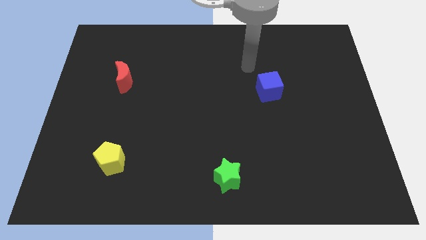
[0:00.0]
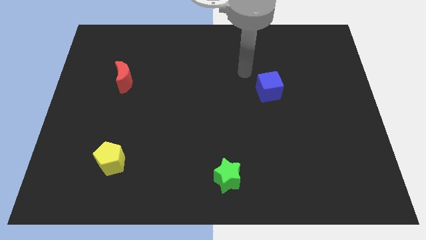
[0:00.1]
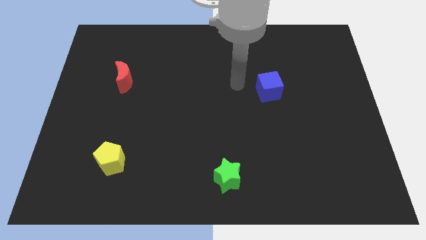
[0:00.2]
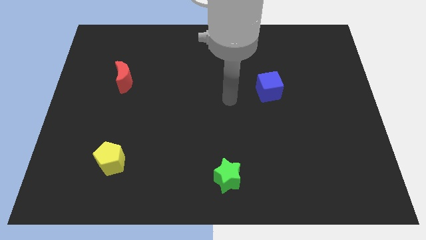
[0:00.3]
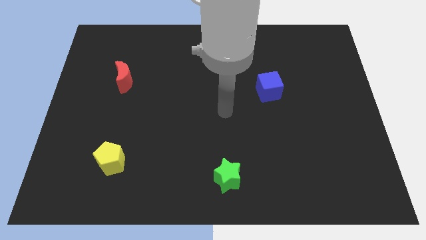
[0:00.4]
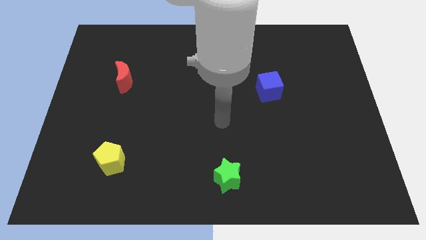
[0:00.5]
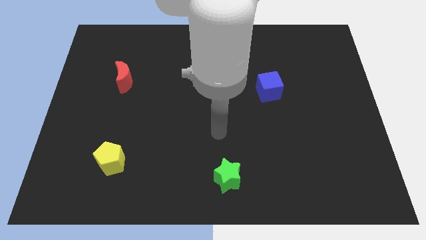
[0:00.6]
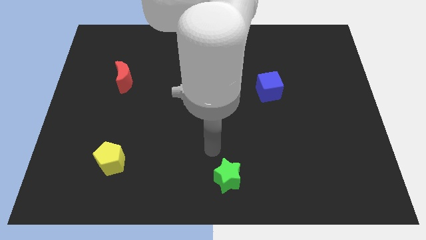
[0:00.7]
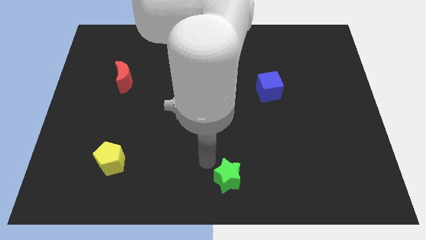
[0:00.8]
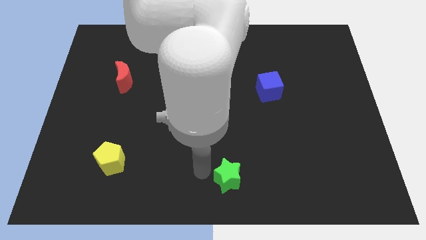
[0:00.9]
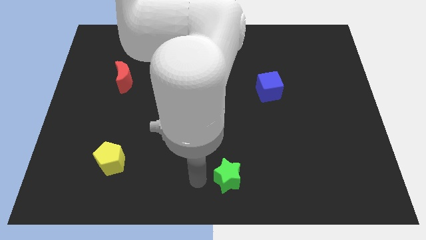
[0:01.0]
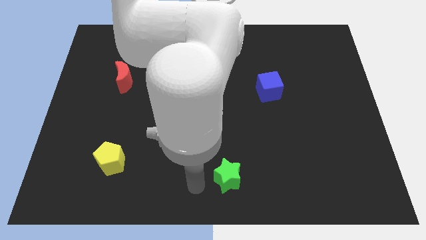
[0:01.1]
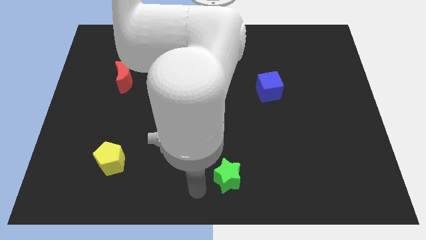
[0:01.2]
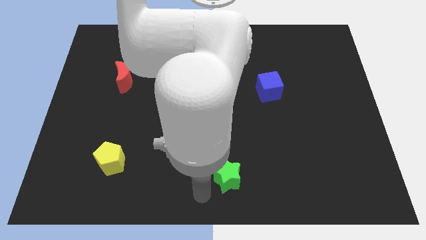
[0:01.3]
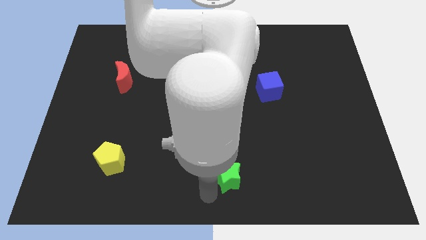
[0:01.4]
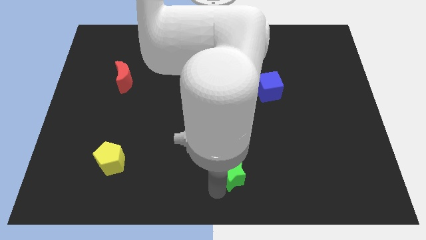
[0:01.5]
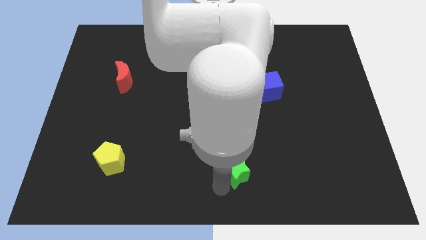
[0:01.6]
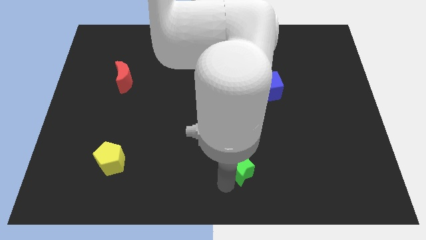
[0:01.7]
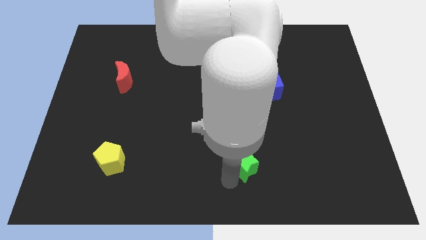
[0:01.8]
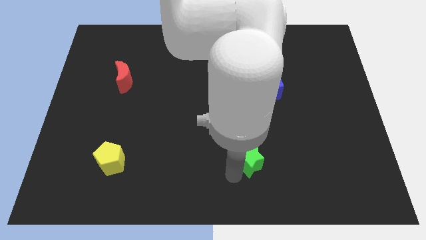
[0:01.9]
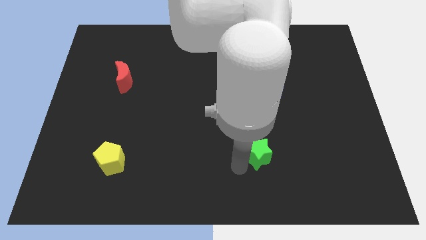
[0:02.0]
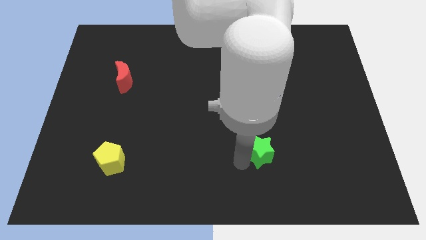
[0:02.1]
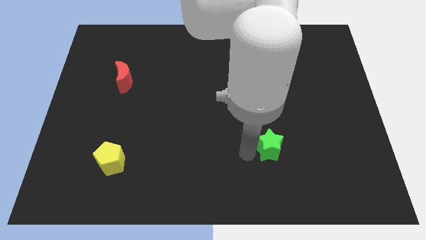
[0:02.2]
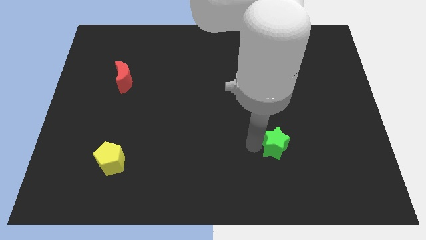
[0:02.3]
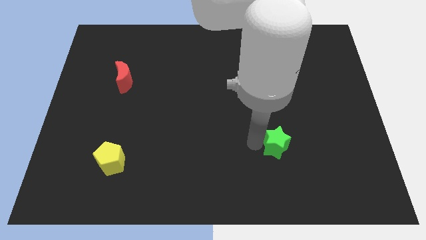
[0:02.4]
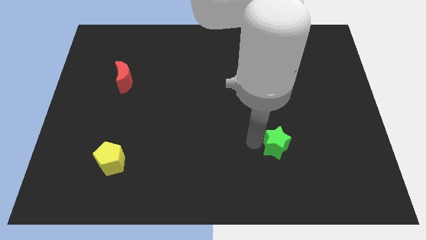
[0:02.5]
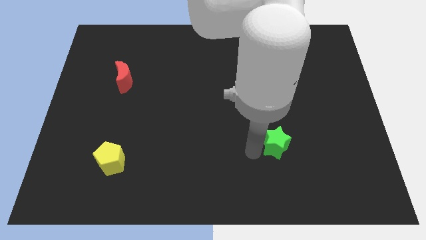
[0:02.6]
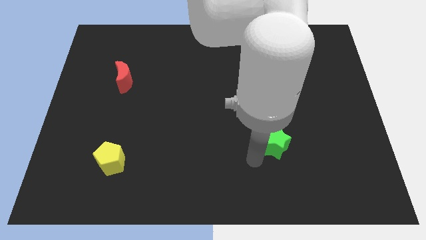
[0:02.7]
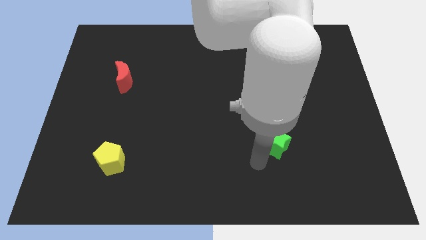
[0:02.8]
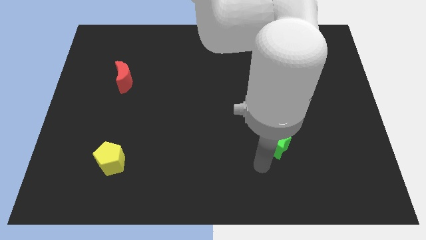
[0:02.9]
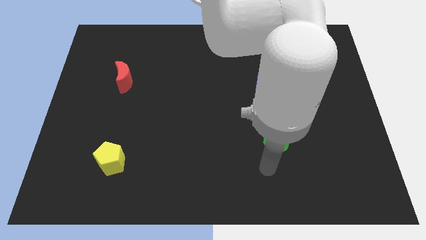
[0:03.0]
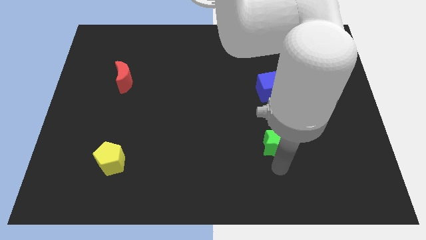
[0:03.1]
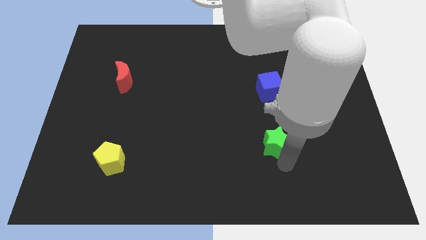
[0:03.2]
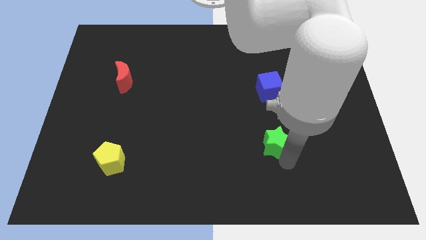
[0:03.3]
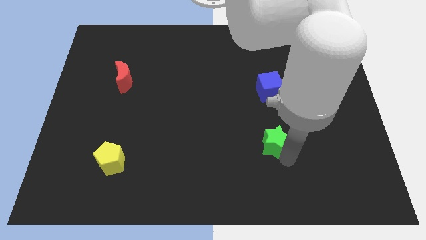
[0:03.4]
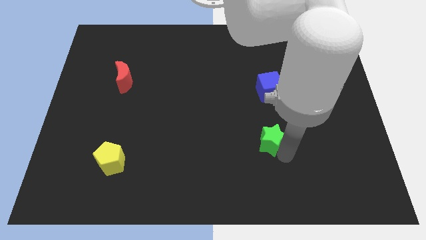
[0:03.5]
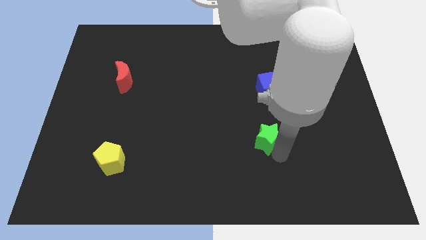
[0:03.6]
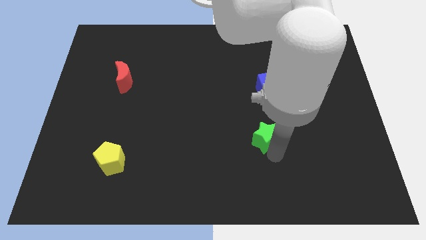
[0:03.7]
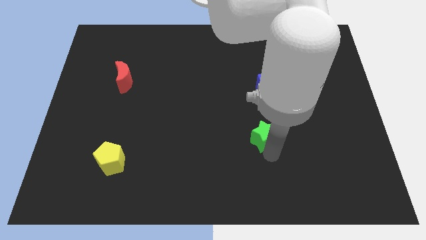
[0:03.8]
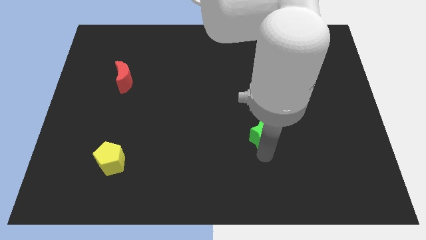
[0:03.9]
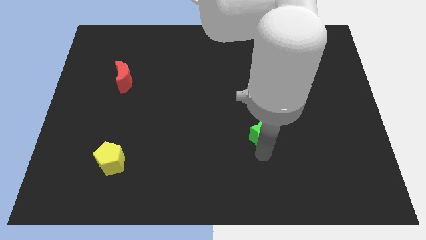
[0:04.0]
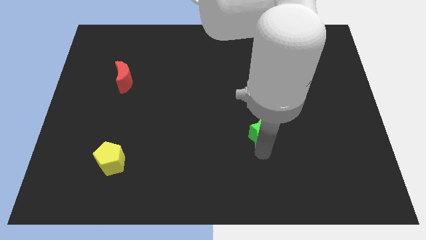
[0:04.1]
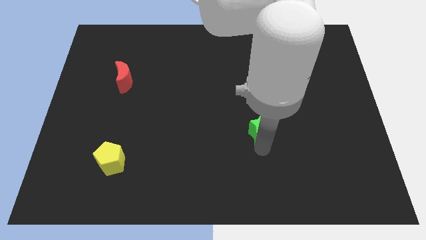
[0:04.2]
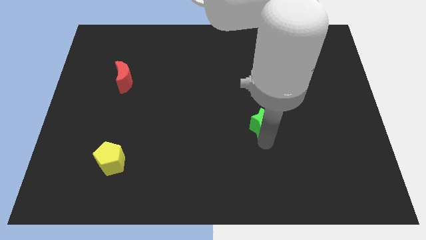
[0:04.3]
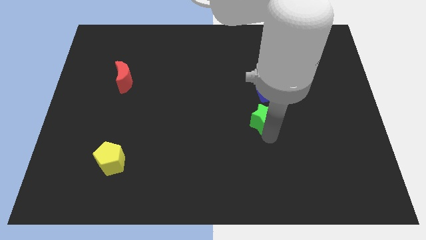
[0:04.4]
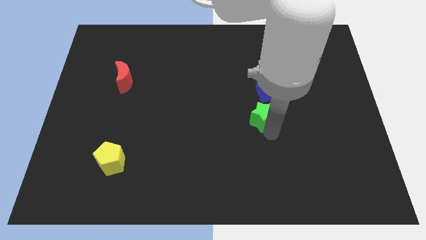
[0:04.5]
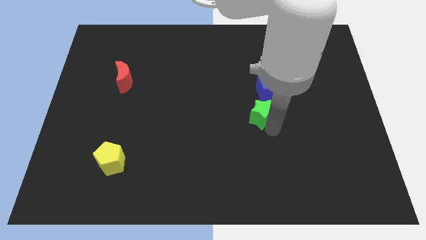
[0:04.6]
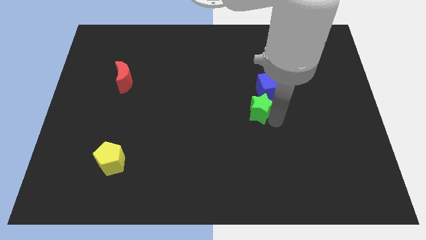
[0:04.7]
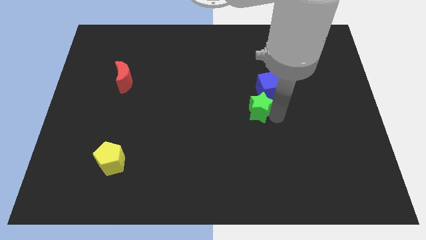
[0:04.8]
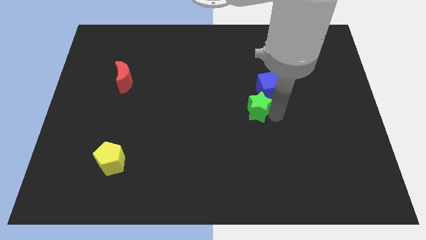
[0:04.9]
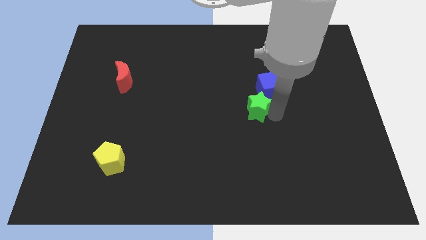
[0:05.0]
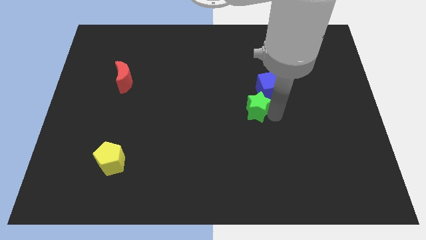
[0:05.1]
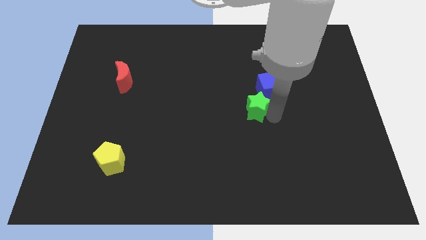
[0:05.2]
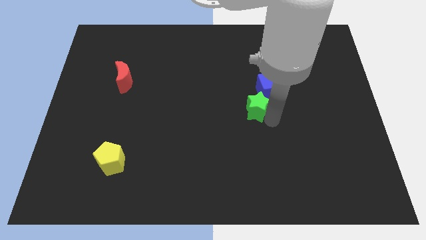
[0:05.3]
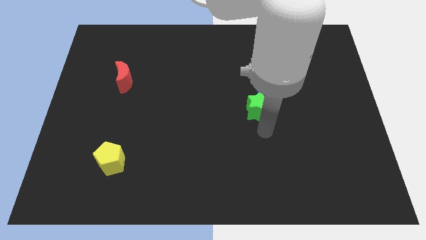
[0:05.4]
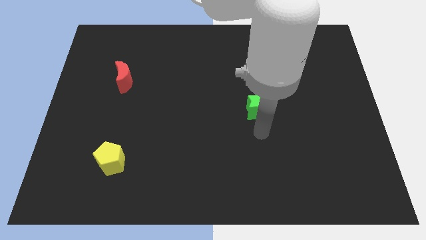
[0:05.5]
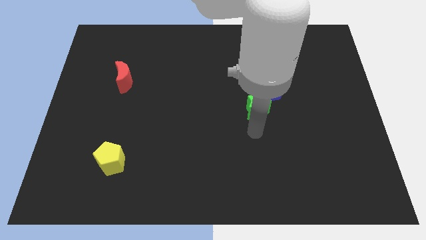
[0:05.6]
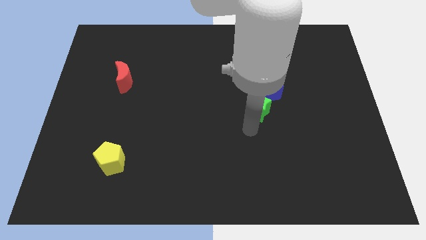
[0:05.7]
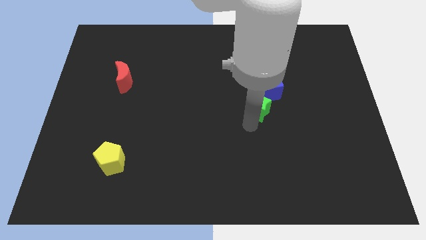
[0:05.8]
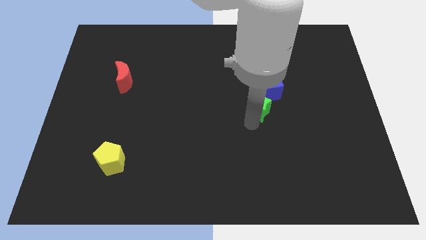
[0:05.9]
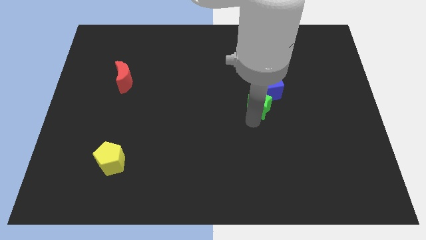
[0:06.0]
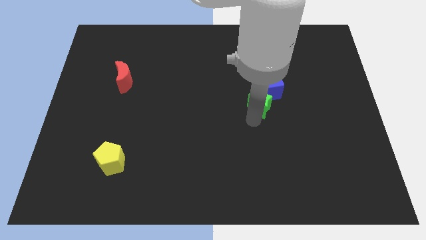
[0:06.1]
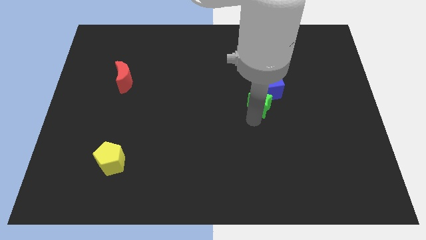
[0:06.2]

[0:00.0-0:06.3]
put the star next to the blue cube

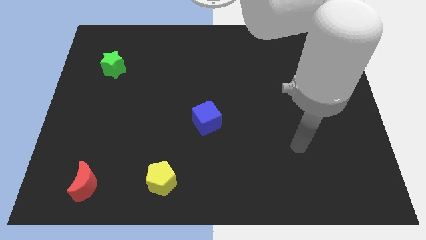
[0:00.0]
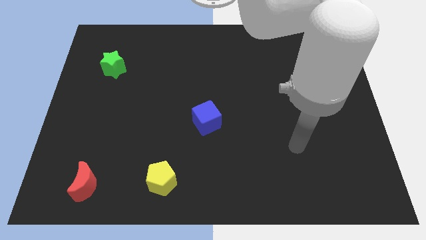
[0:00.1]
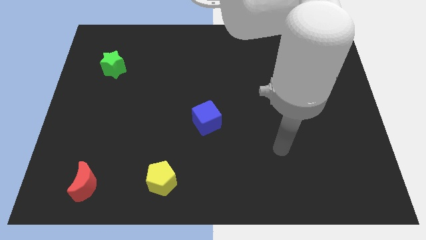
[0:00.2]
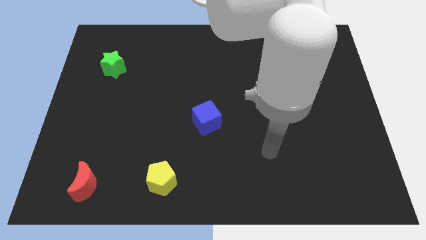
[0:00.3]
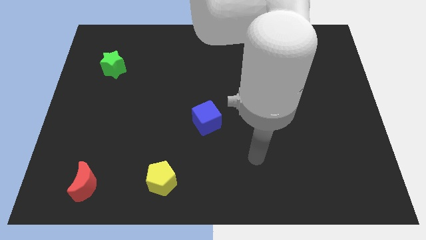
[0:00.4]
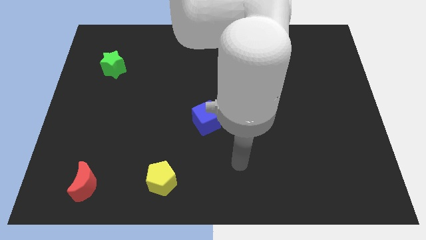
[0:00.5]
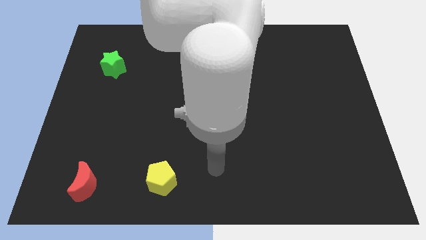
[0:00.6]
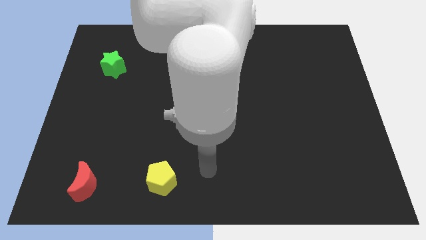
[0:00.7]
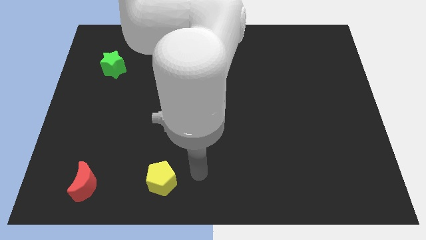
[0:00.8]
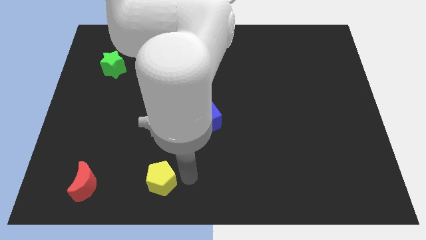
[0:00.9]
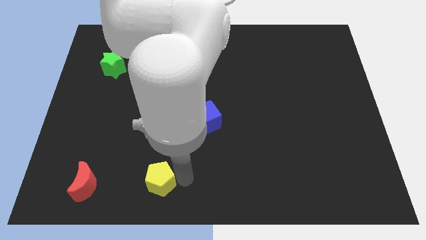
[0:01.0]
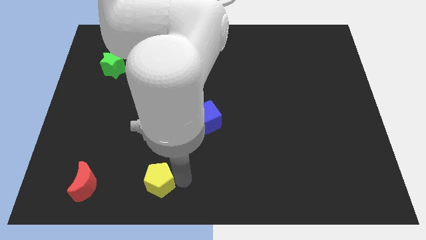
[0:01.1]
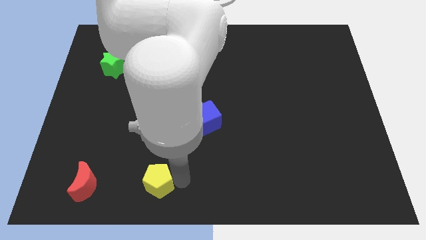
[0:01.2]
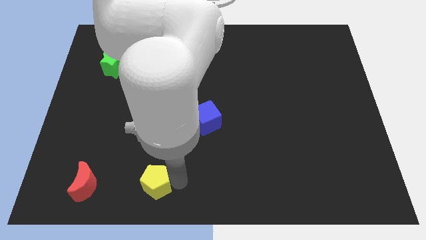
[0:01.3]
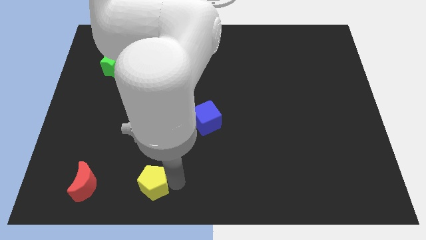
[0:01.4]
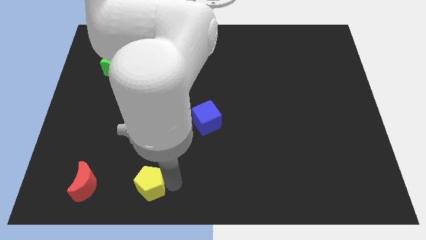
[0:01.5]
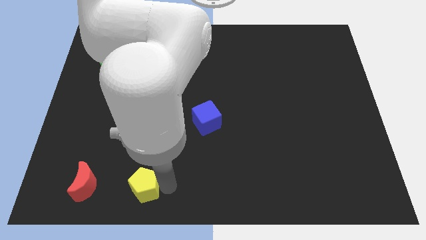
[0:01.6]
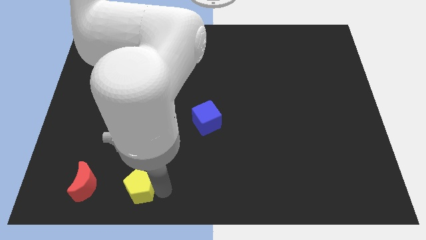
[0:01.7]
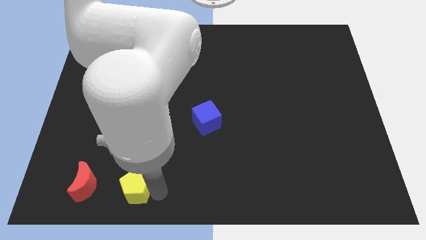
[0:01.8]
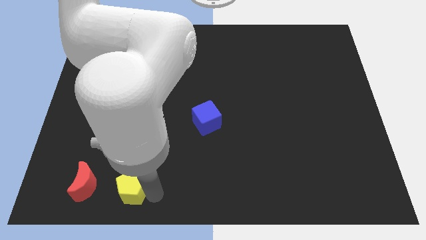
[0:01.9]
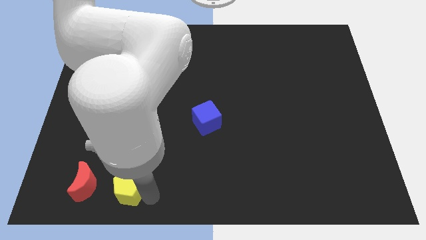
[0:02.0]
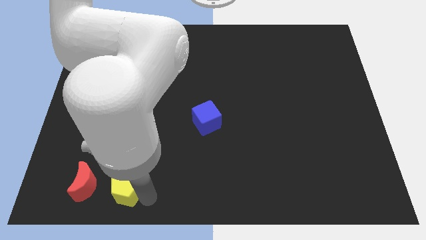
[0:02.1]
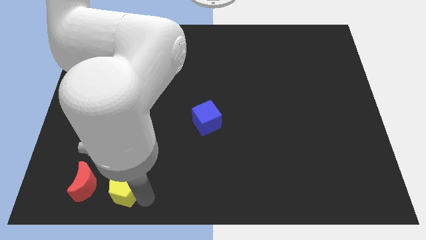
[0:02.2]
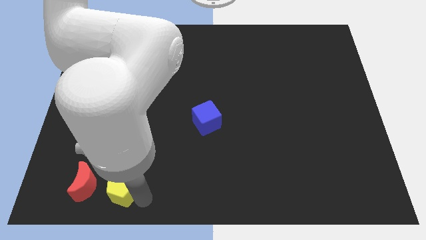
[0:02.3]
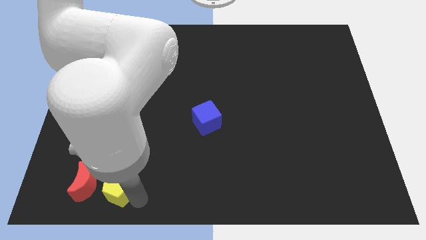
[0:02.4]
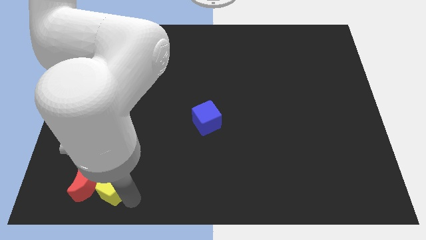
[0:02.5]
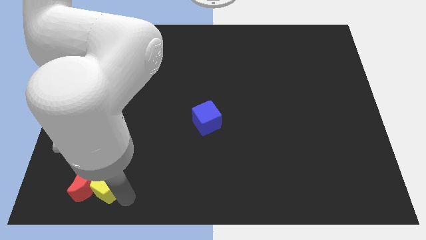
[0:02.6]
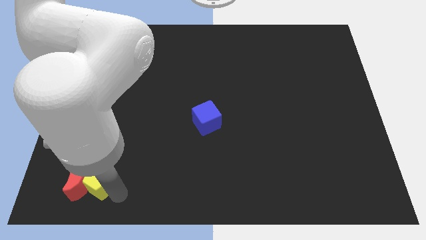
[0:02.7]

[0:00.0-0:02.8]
slide the yellow block towards the red moon
